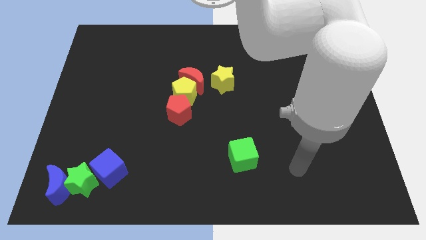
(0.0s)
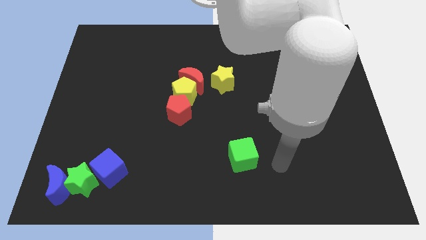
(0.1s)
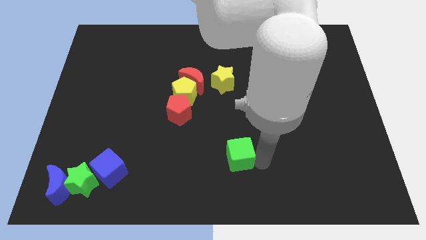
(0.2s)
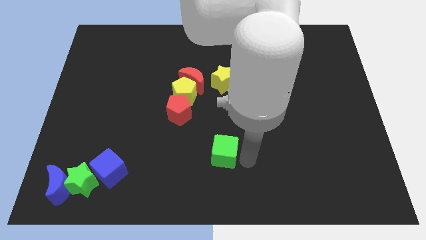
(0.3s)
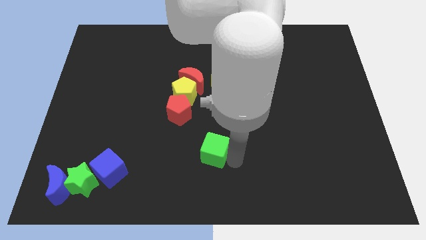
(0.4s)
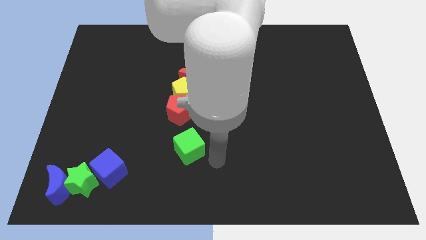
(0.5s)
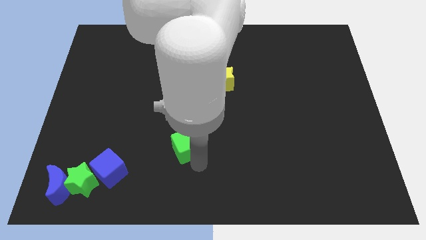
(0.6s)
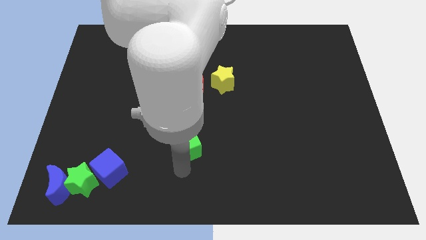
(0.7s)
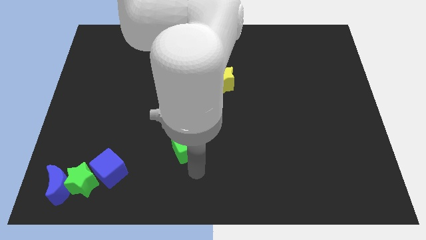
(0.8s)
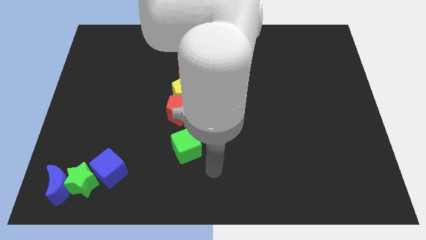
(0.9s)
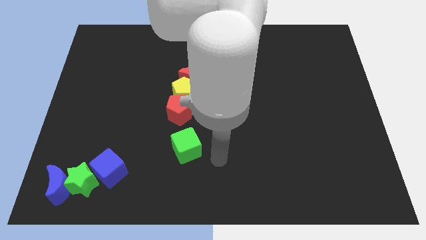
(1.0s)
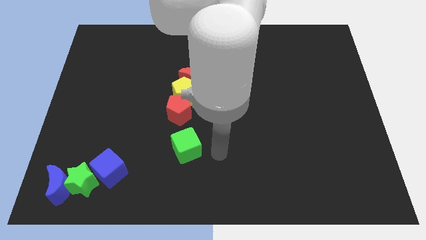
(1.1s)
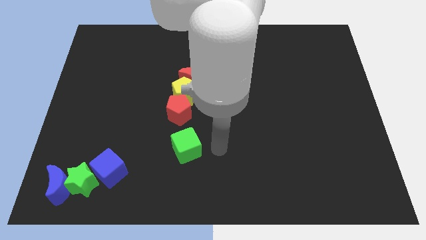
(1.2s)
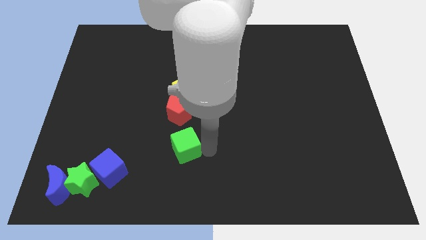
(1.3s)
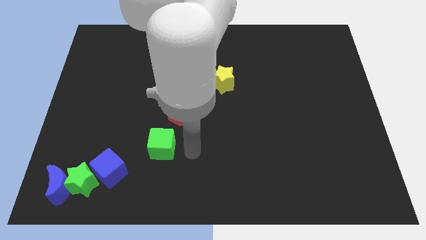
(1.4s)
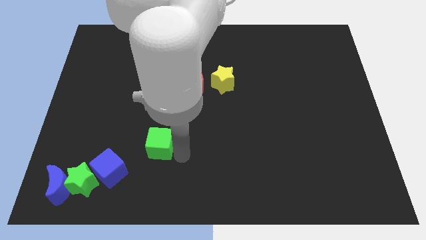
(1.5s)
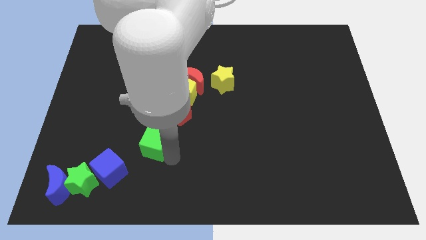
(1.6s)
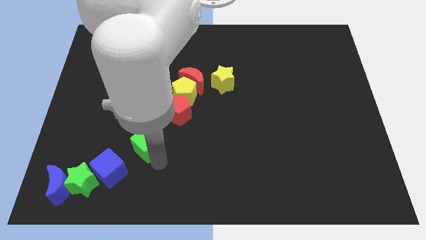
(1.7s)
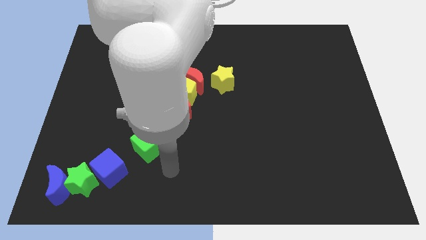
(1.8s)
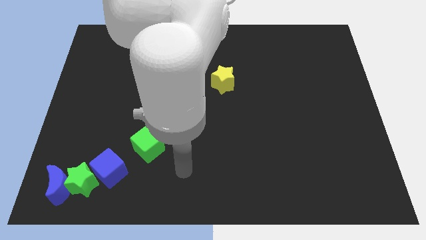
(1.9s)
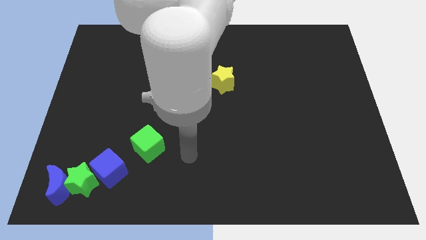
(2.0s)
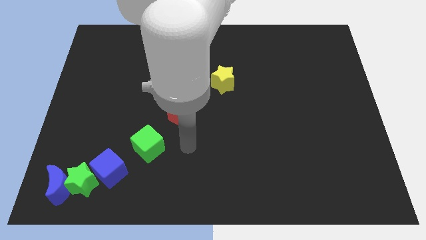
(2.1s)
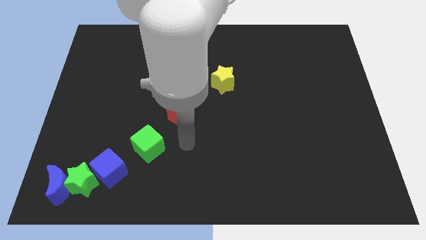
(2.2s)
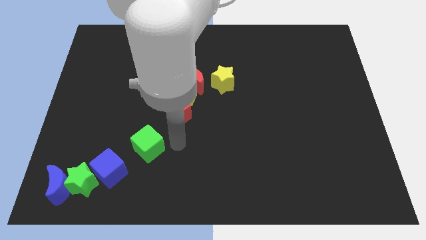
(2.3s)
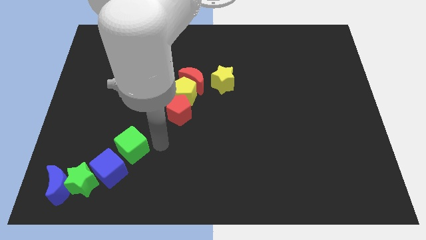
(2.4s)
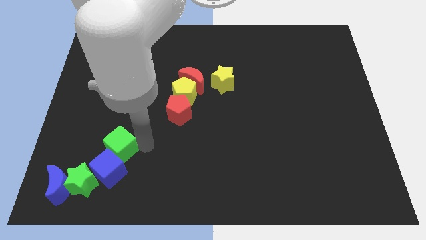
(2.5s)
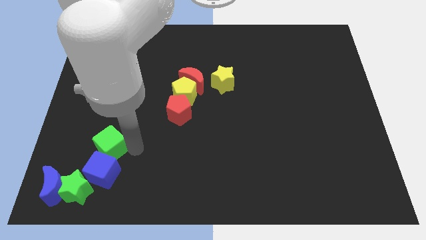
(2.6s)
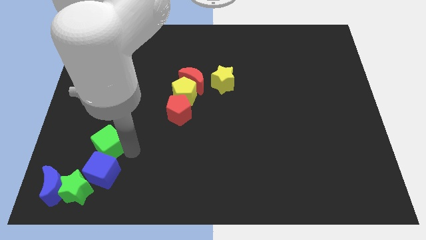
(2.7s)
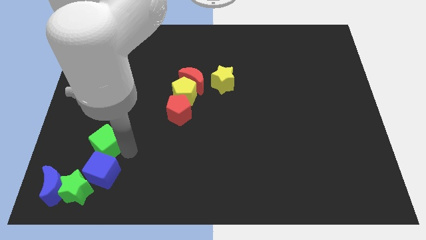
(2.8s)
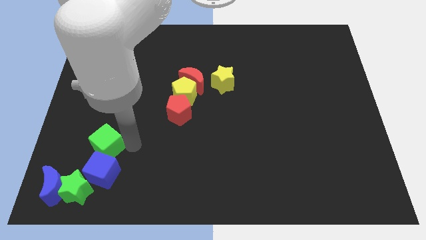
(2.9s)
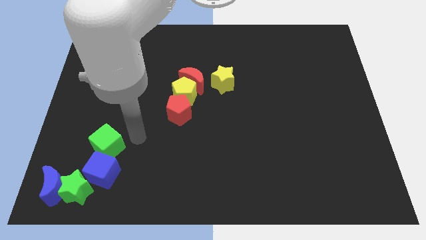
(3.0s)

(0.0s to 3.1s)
push the green cube into the blue cube

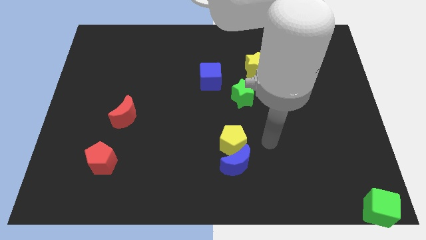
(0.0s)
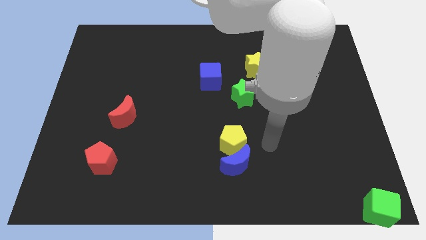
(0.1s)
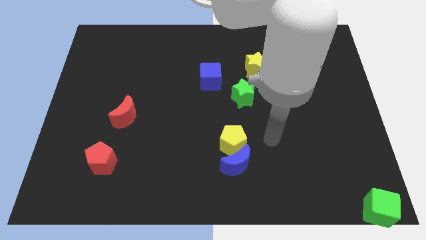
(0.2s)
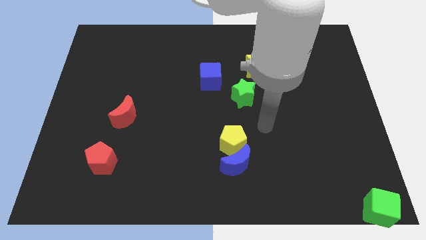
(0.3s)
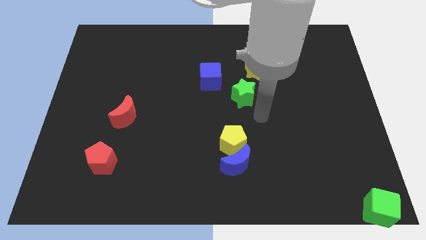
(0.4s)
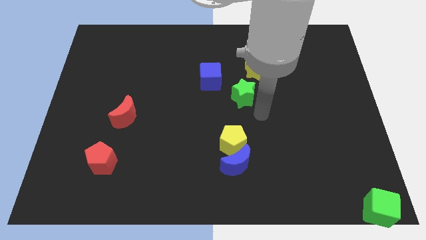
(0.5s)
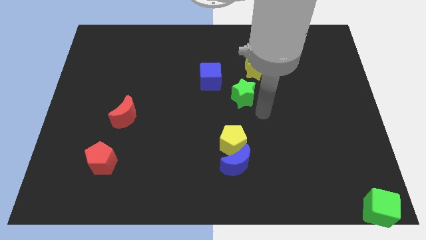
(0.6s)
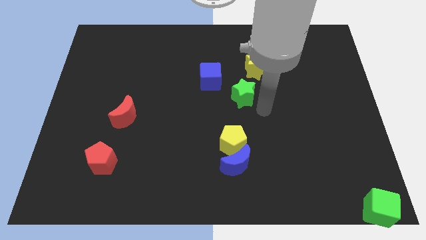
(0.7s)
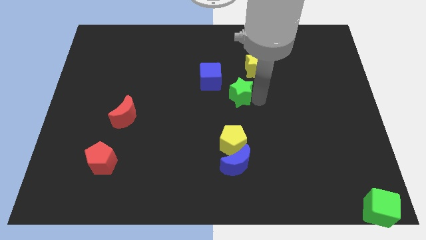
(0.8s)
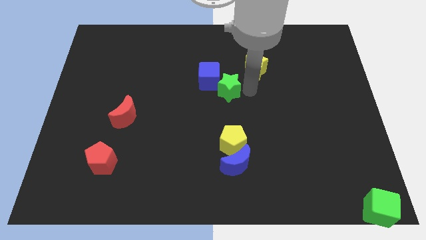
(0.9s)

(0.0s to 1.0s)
push the green star into the bottom right of the blue cube

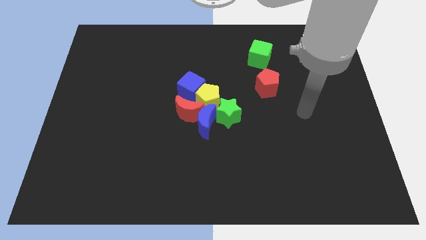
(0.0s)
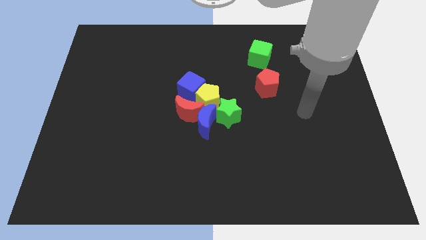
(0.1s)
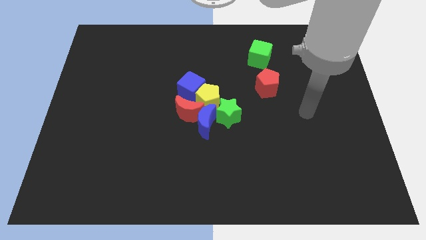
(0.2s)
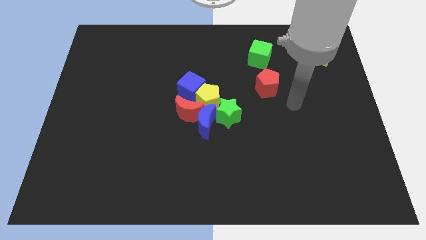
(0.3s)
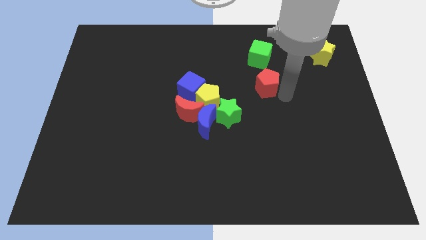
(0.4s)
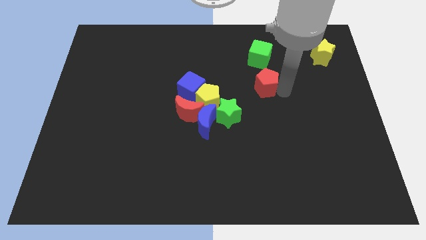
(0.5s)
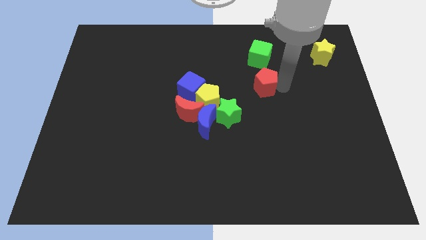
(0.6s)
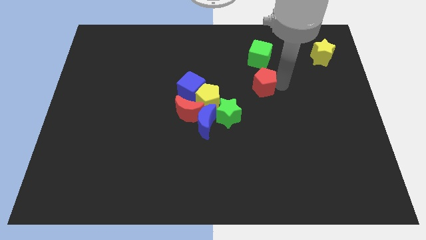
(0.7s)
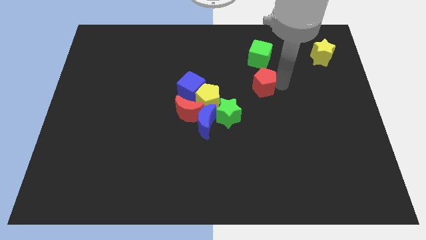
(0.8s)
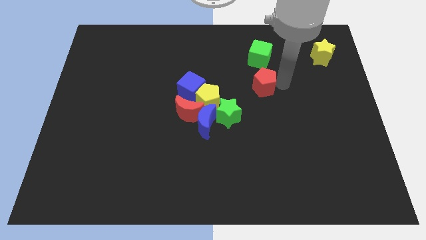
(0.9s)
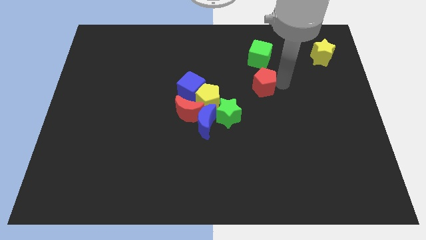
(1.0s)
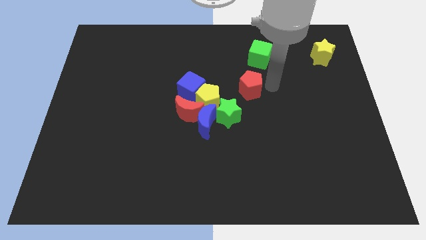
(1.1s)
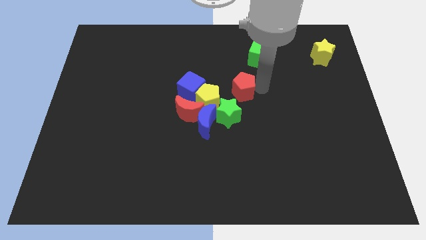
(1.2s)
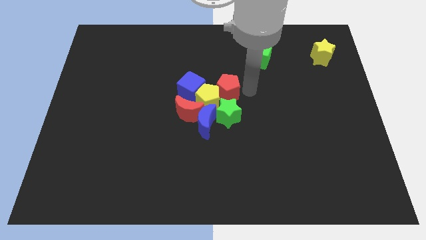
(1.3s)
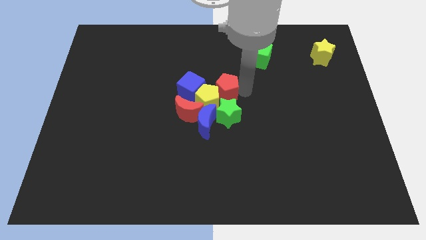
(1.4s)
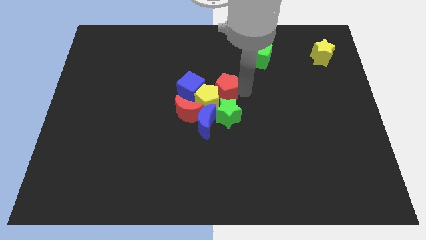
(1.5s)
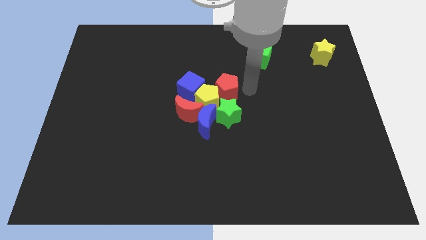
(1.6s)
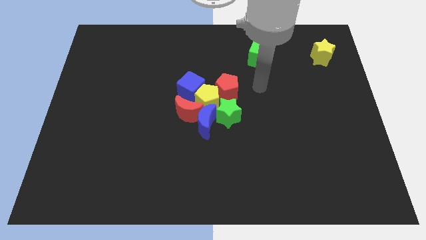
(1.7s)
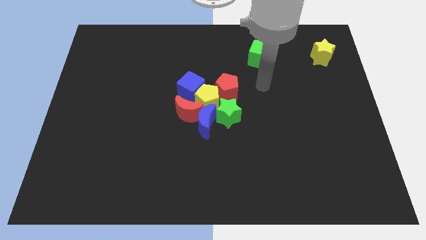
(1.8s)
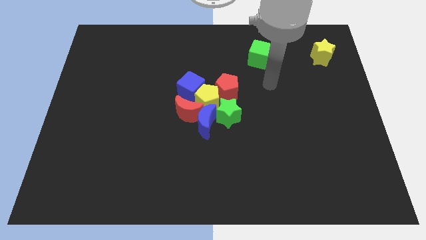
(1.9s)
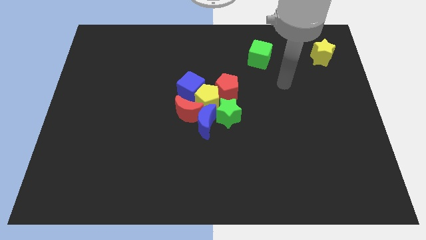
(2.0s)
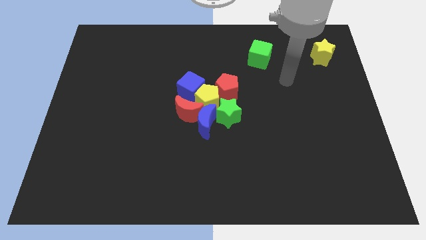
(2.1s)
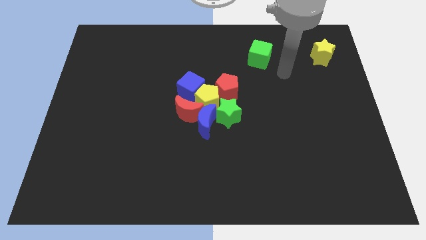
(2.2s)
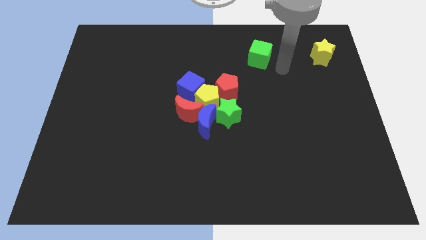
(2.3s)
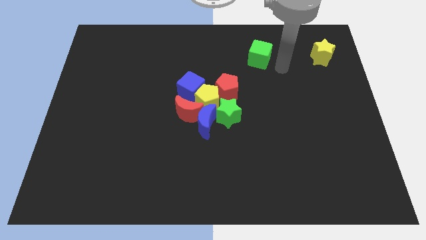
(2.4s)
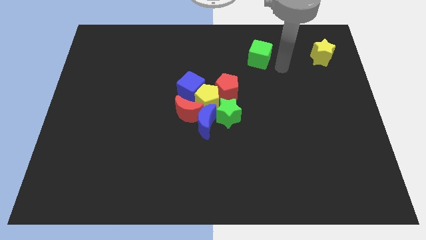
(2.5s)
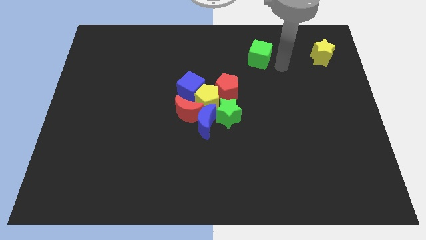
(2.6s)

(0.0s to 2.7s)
move the red pentagon into the yellow pentagon

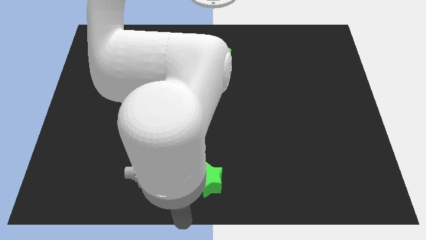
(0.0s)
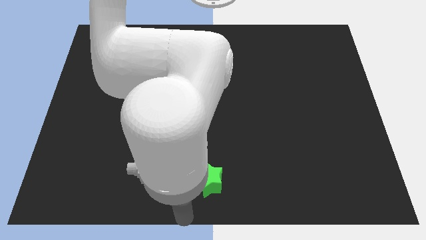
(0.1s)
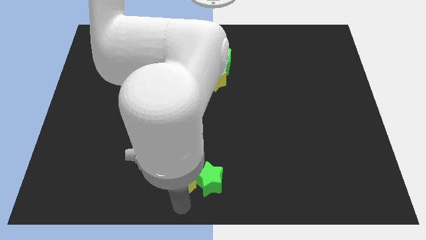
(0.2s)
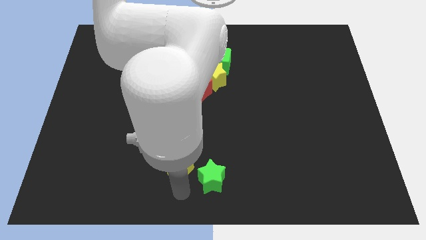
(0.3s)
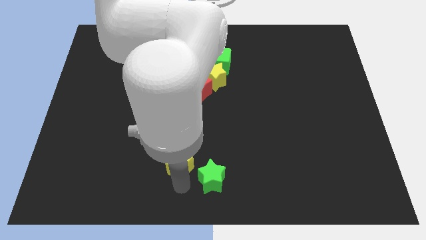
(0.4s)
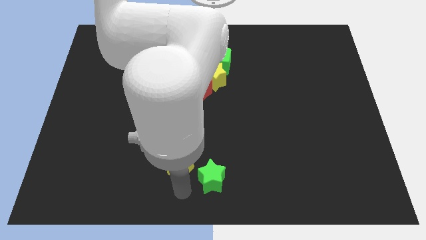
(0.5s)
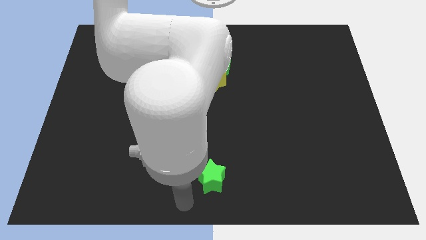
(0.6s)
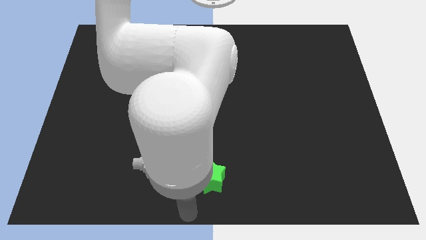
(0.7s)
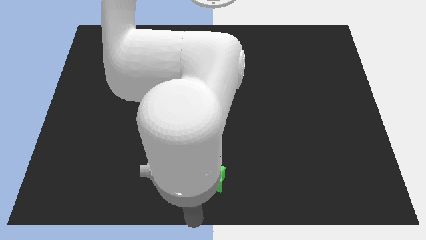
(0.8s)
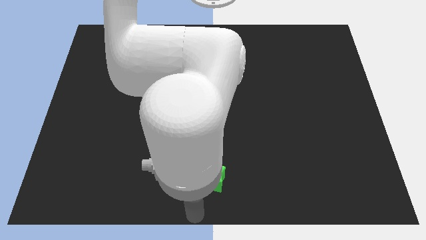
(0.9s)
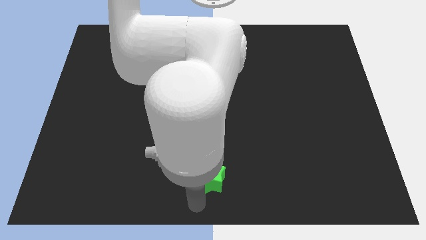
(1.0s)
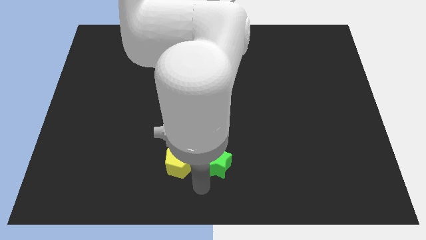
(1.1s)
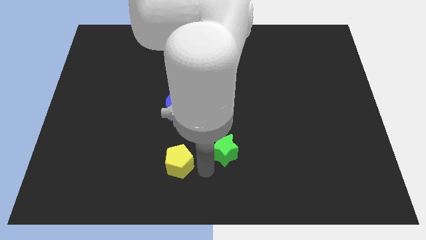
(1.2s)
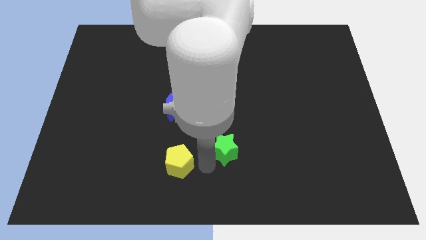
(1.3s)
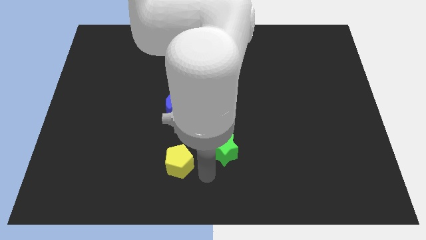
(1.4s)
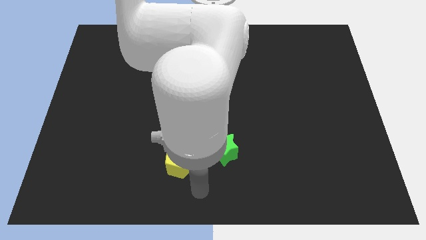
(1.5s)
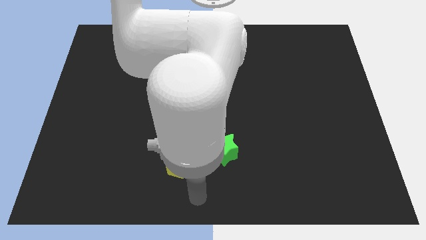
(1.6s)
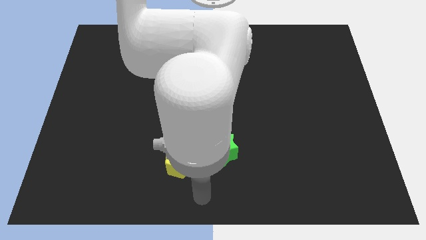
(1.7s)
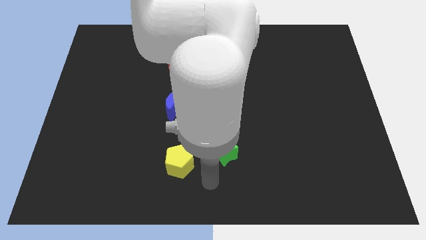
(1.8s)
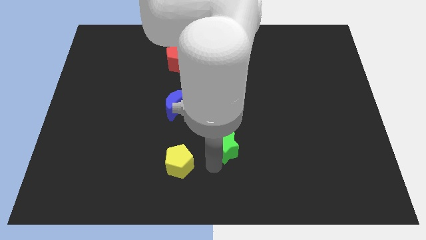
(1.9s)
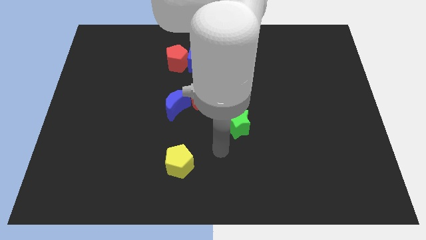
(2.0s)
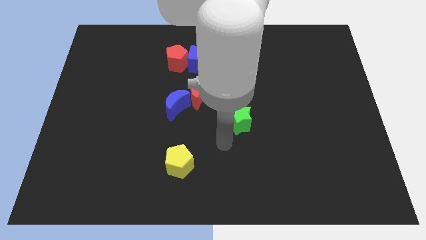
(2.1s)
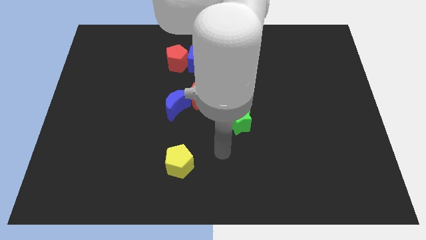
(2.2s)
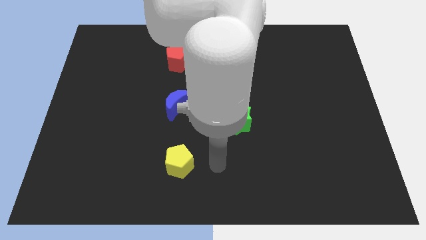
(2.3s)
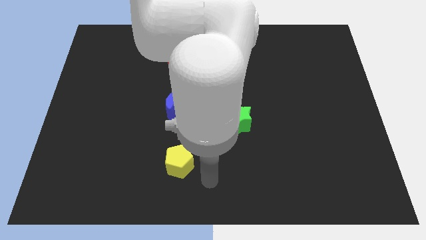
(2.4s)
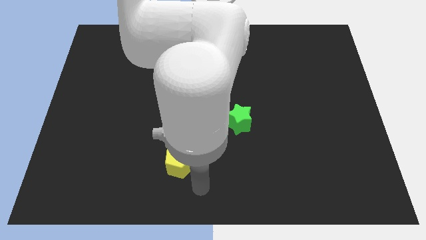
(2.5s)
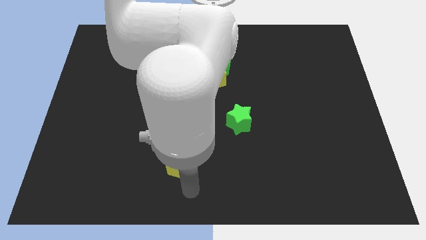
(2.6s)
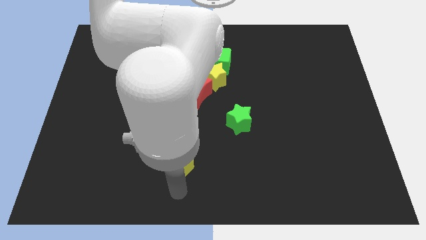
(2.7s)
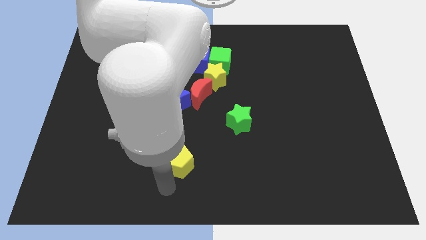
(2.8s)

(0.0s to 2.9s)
place the green star to the center of the board
